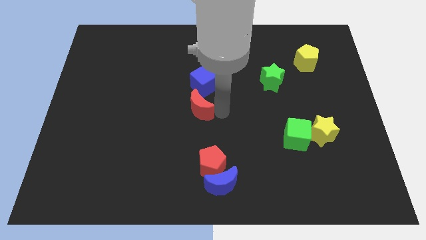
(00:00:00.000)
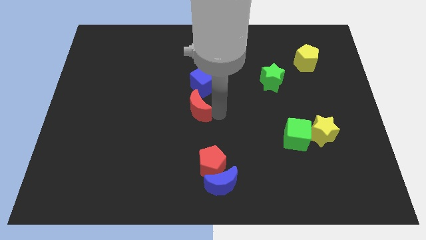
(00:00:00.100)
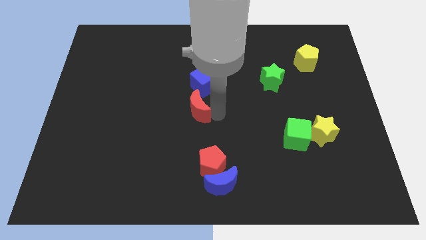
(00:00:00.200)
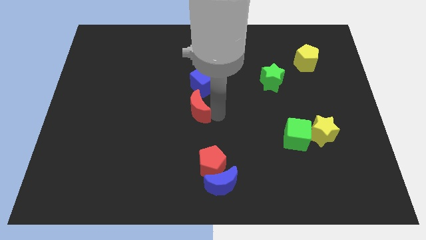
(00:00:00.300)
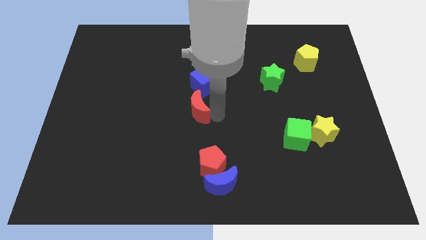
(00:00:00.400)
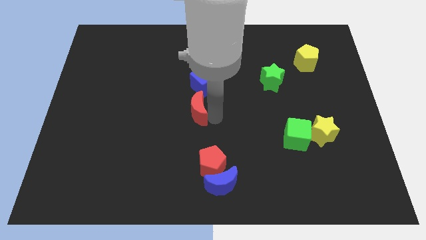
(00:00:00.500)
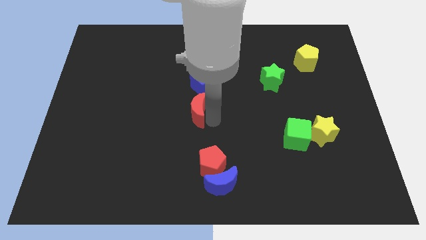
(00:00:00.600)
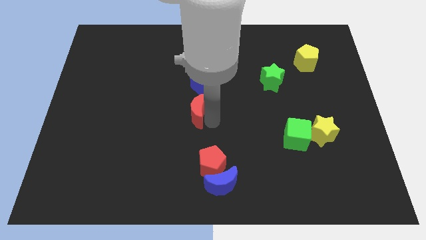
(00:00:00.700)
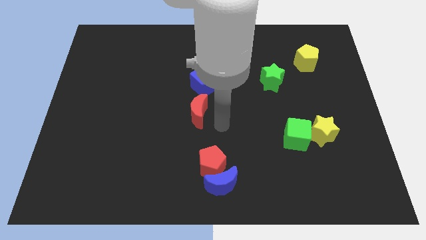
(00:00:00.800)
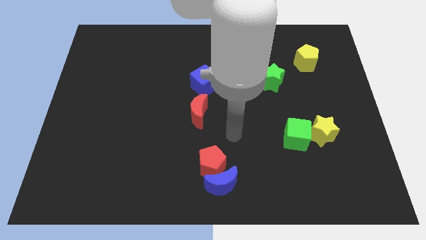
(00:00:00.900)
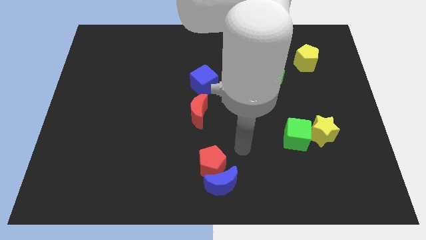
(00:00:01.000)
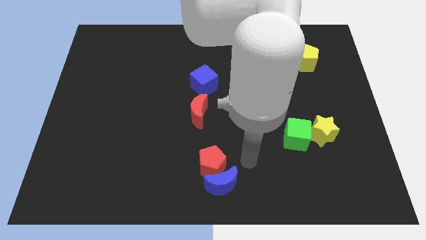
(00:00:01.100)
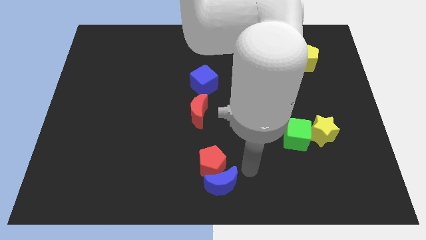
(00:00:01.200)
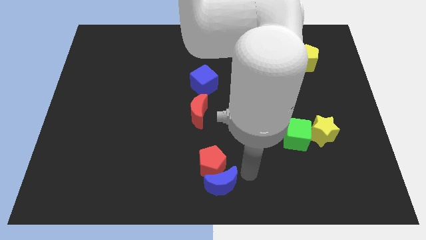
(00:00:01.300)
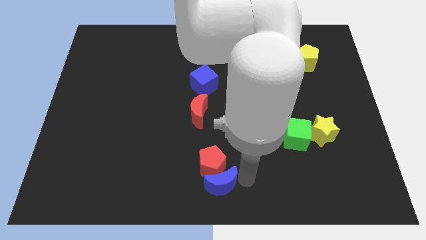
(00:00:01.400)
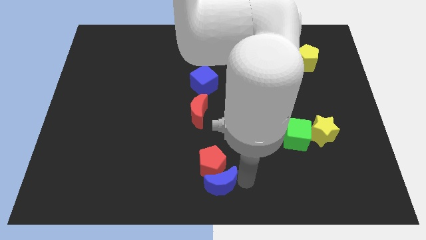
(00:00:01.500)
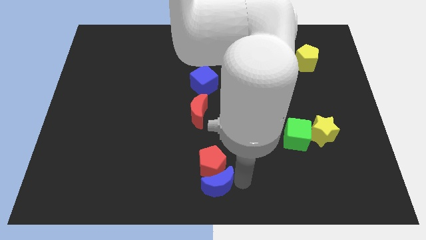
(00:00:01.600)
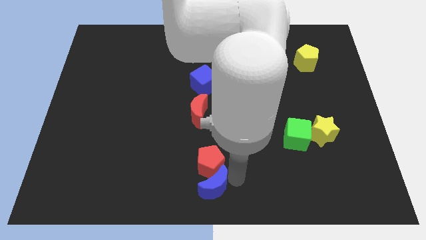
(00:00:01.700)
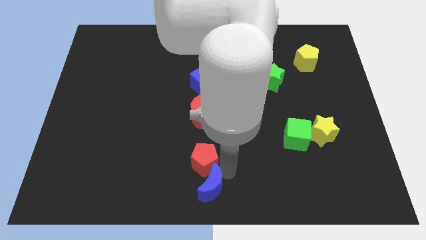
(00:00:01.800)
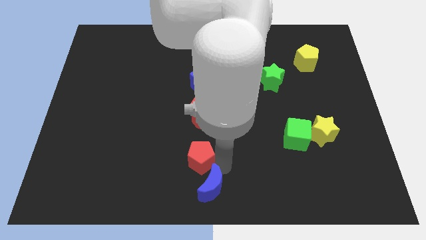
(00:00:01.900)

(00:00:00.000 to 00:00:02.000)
slightly move the red pentagon towards top side

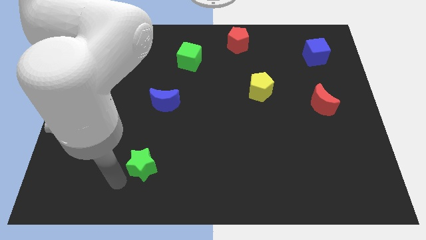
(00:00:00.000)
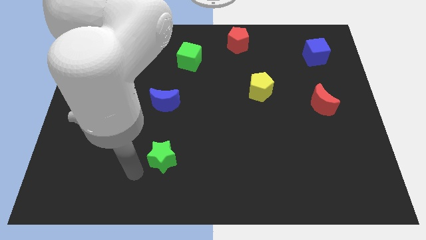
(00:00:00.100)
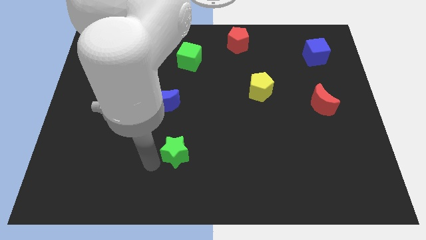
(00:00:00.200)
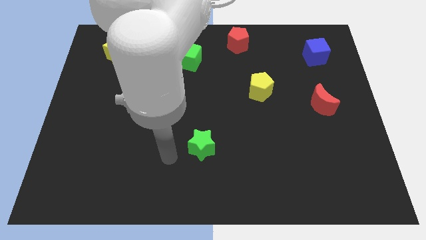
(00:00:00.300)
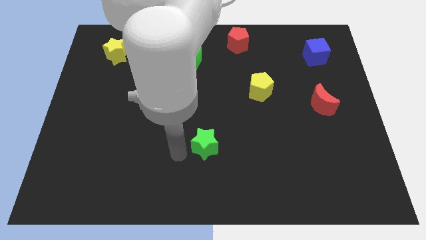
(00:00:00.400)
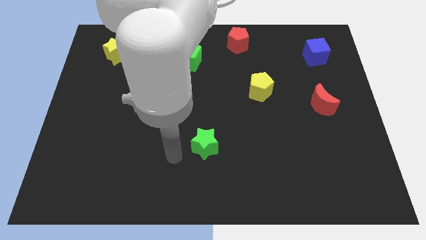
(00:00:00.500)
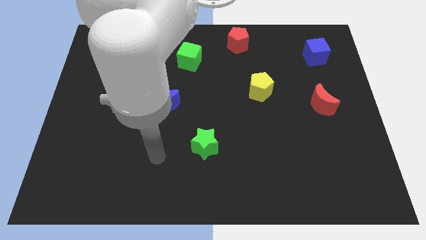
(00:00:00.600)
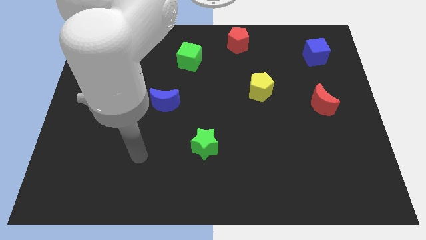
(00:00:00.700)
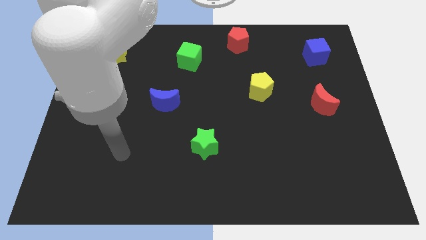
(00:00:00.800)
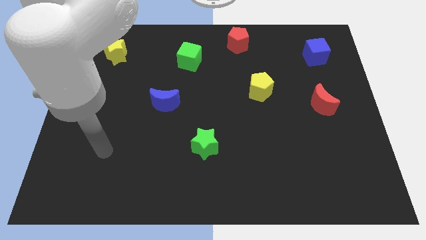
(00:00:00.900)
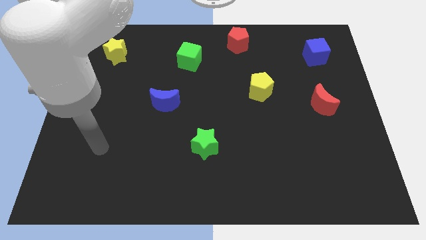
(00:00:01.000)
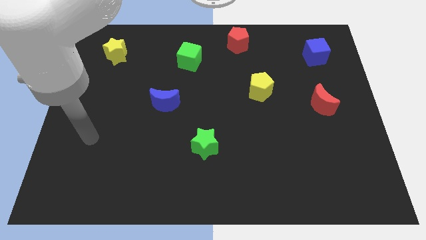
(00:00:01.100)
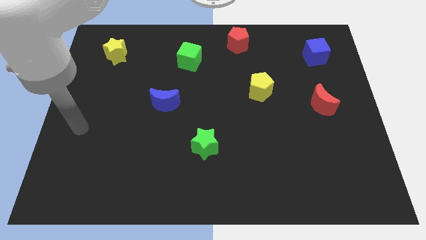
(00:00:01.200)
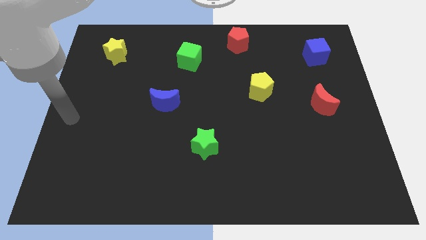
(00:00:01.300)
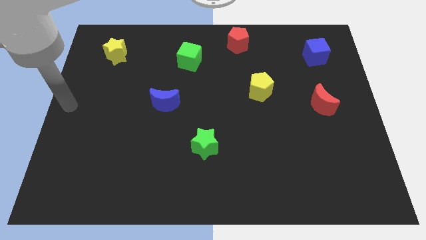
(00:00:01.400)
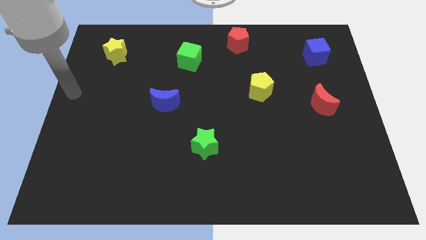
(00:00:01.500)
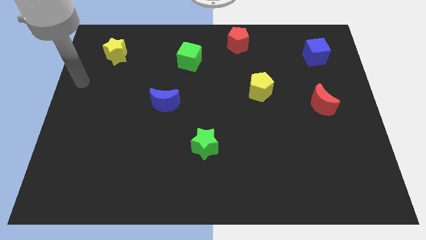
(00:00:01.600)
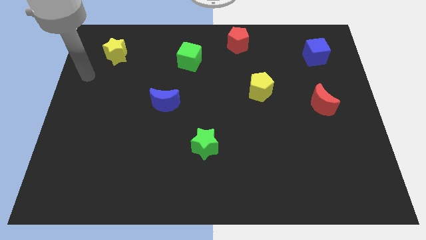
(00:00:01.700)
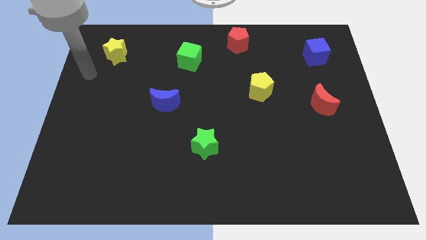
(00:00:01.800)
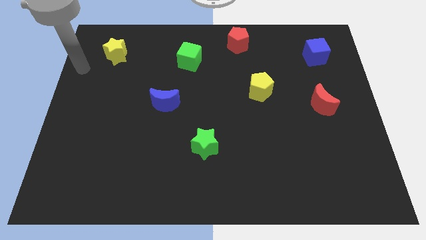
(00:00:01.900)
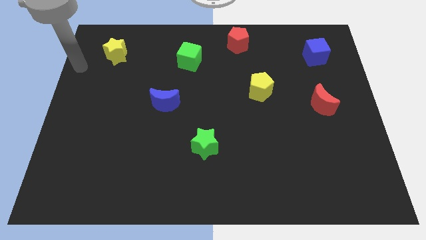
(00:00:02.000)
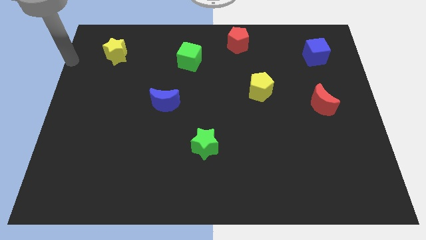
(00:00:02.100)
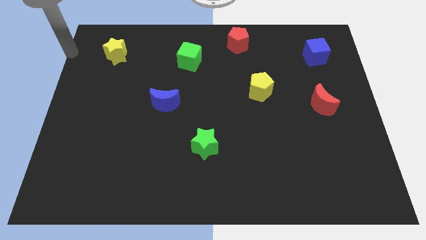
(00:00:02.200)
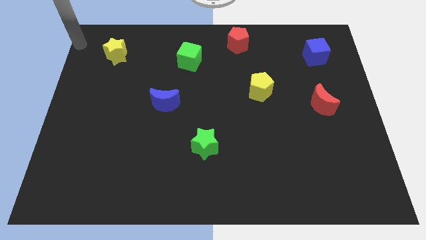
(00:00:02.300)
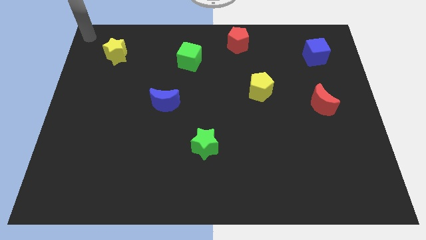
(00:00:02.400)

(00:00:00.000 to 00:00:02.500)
point your hand at the top left corner

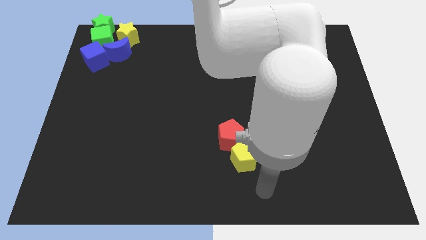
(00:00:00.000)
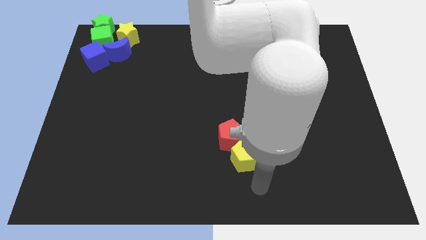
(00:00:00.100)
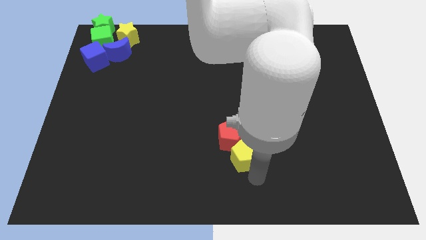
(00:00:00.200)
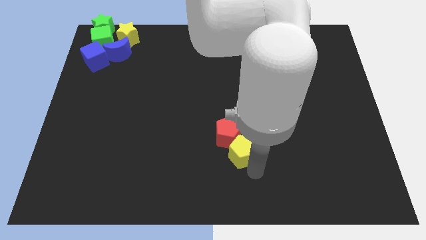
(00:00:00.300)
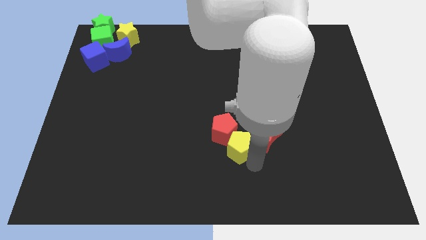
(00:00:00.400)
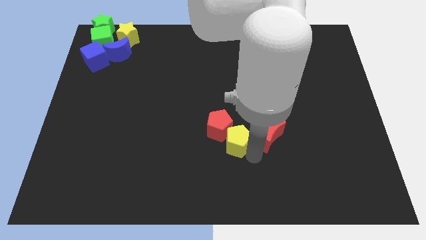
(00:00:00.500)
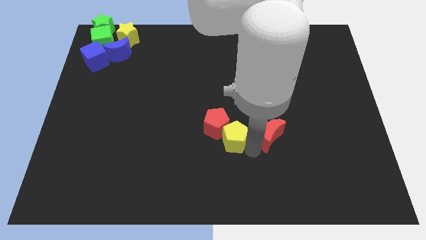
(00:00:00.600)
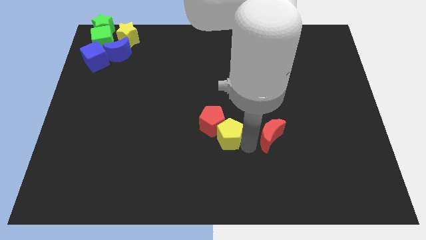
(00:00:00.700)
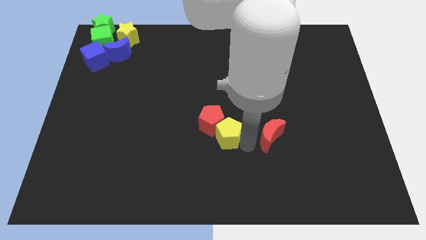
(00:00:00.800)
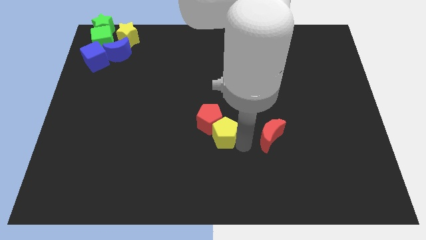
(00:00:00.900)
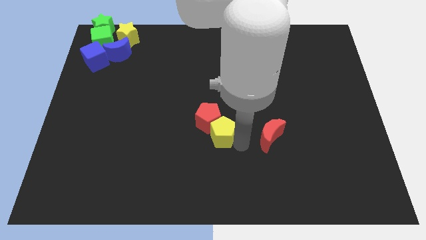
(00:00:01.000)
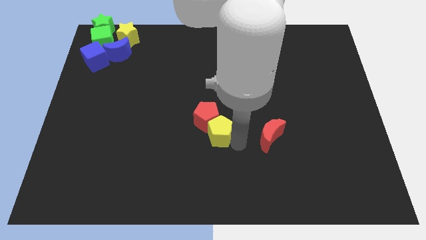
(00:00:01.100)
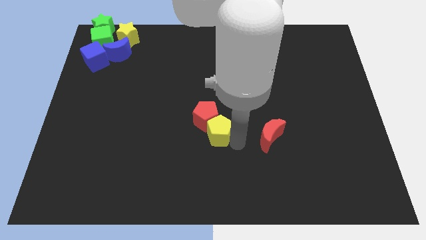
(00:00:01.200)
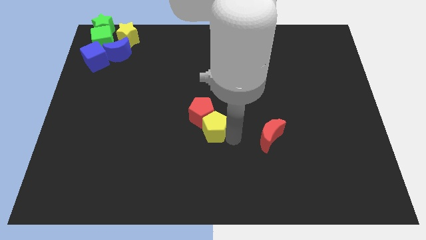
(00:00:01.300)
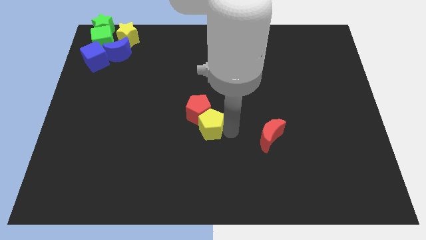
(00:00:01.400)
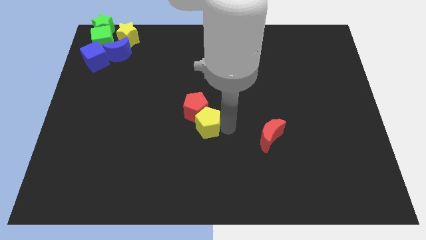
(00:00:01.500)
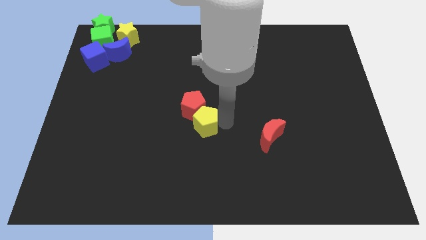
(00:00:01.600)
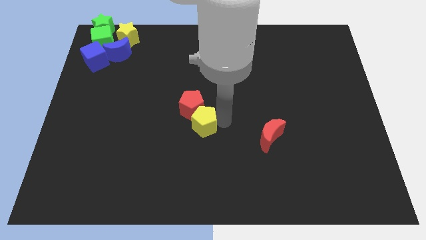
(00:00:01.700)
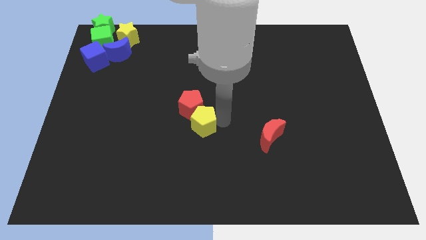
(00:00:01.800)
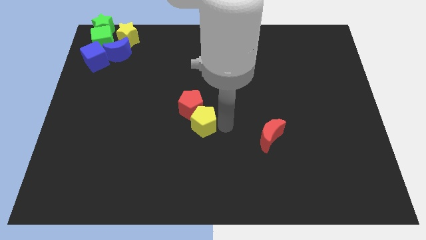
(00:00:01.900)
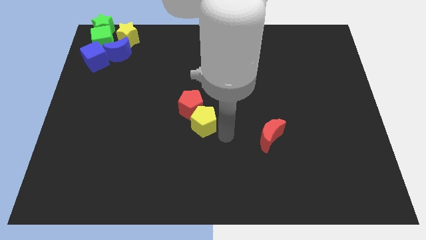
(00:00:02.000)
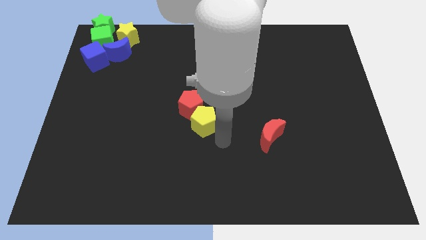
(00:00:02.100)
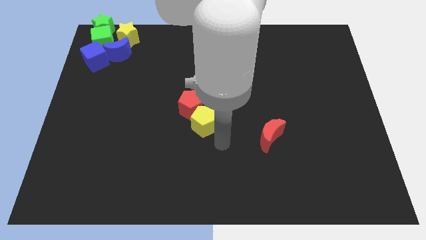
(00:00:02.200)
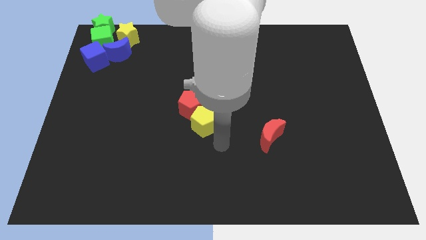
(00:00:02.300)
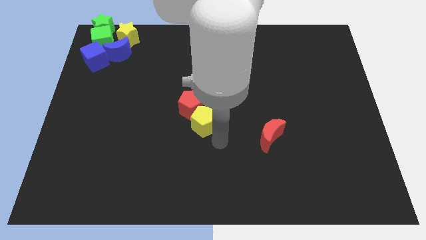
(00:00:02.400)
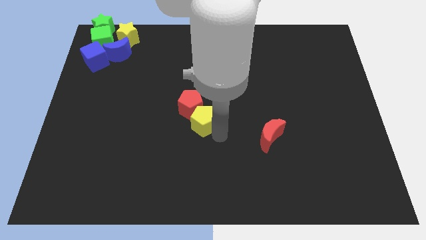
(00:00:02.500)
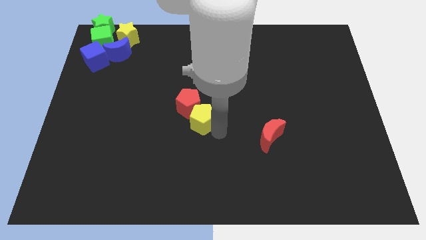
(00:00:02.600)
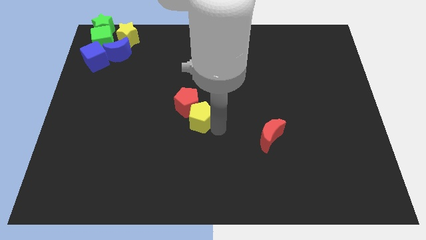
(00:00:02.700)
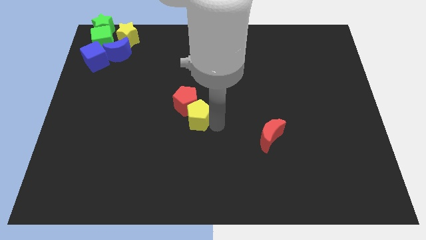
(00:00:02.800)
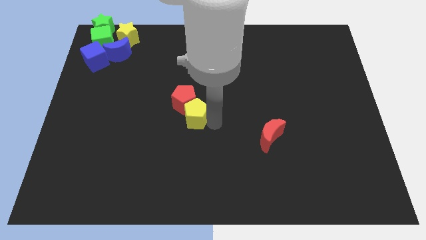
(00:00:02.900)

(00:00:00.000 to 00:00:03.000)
move the red and yellow pentagons towards the top left corner of the board

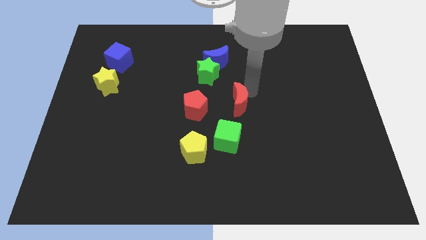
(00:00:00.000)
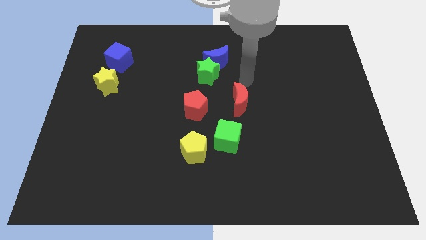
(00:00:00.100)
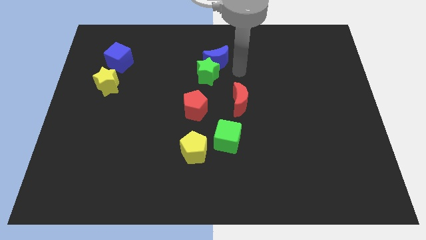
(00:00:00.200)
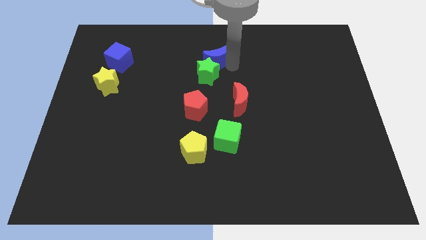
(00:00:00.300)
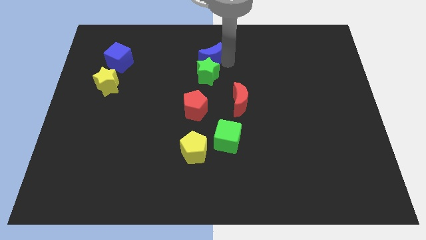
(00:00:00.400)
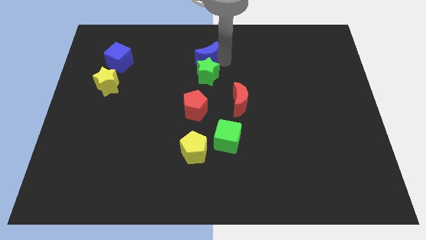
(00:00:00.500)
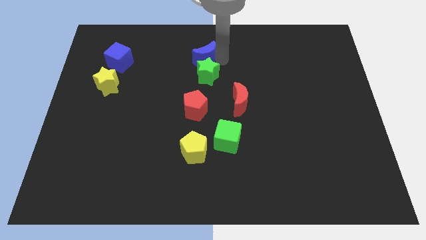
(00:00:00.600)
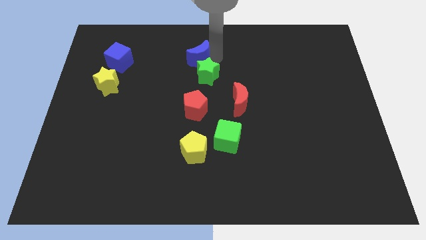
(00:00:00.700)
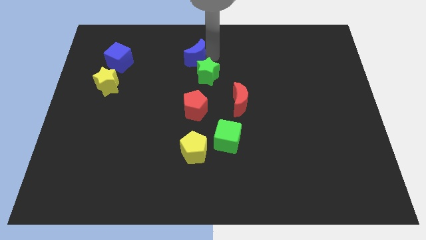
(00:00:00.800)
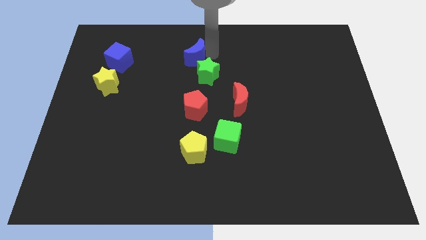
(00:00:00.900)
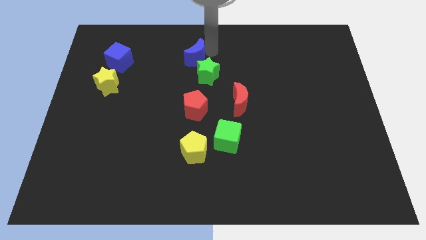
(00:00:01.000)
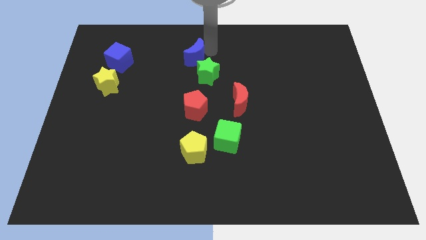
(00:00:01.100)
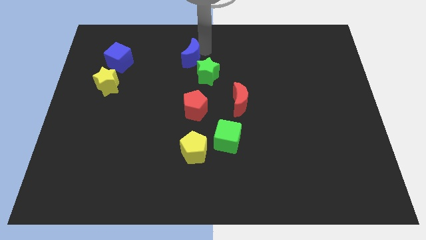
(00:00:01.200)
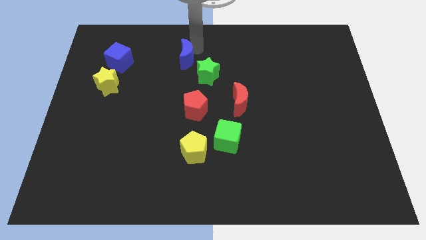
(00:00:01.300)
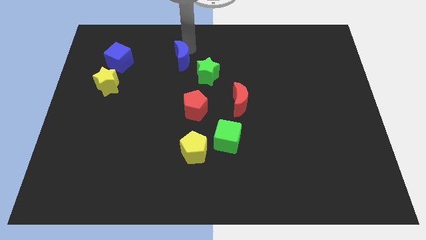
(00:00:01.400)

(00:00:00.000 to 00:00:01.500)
separate blue moon from green star
